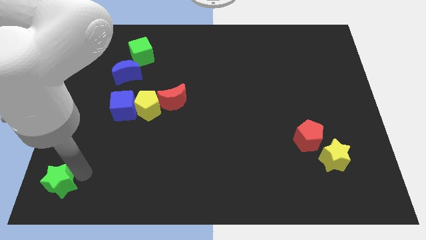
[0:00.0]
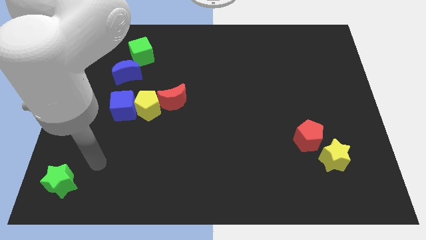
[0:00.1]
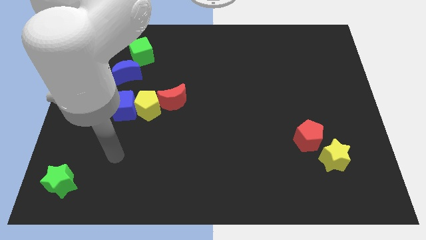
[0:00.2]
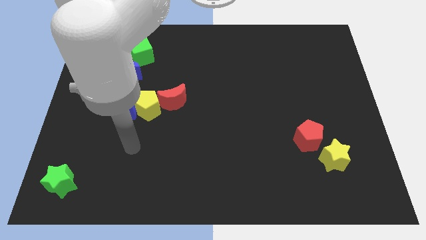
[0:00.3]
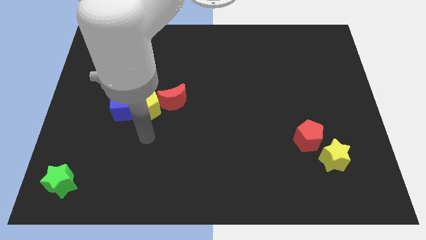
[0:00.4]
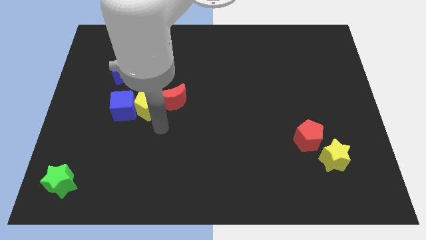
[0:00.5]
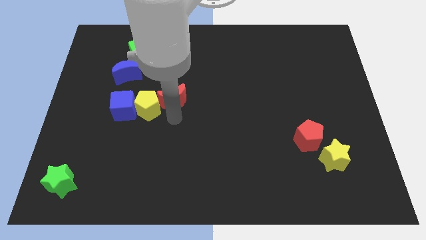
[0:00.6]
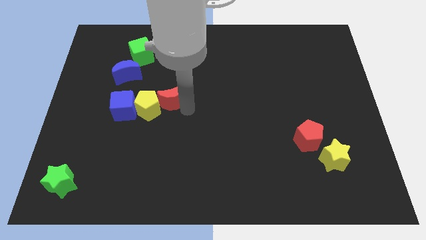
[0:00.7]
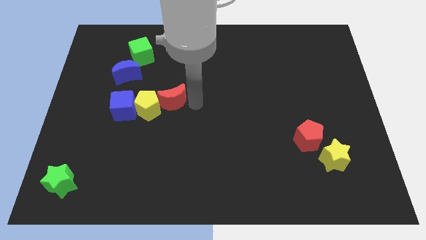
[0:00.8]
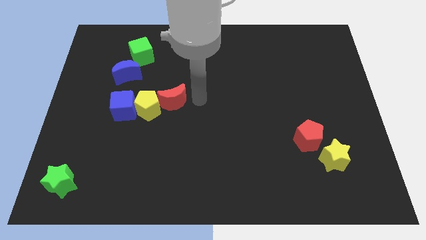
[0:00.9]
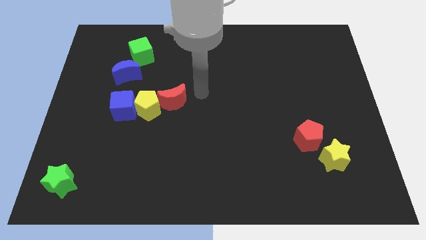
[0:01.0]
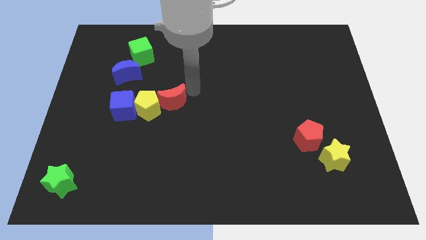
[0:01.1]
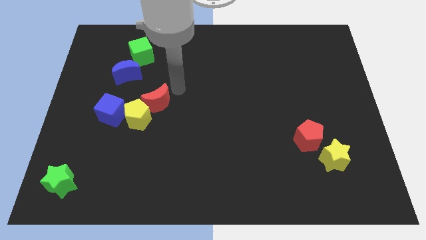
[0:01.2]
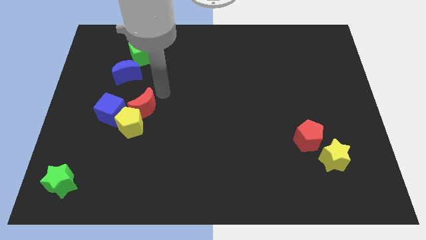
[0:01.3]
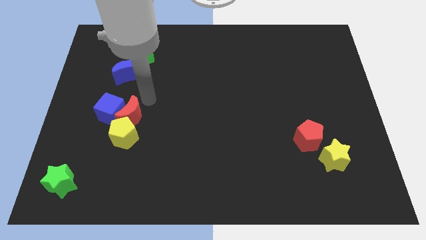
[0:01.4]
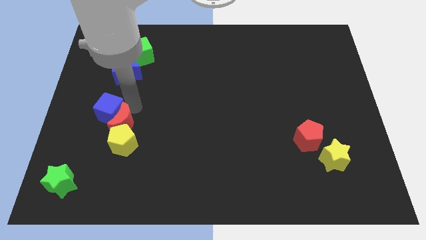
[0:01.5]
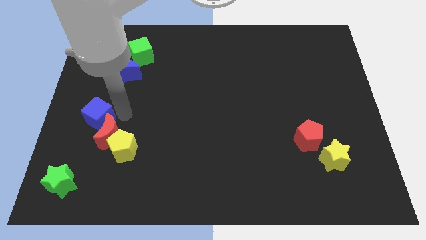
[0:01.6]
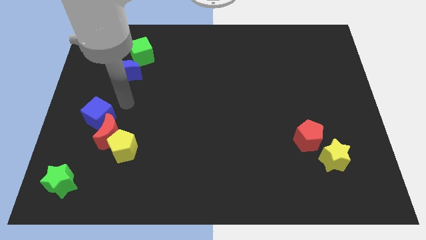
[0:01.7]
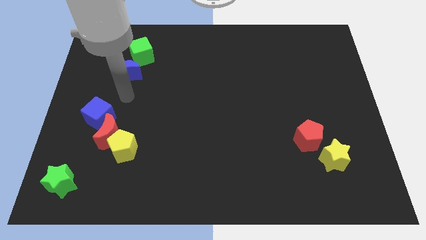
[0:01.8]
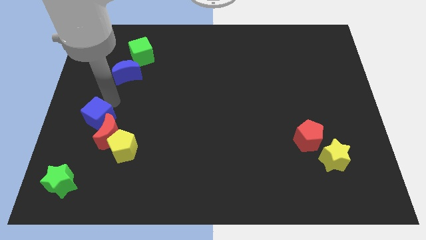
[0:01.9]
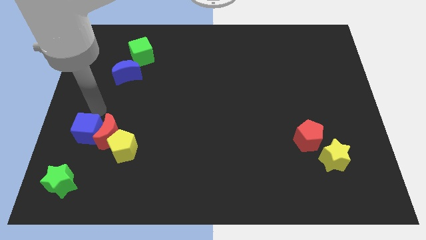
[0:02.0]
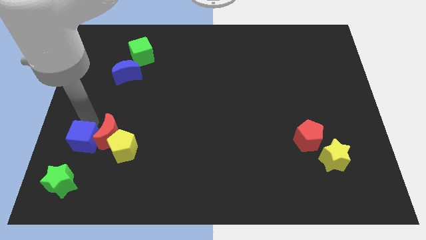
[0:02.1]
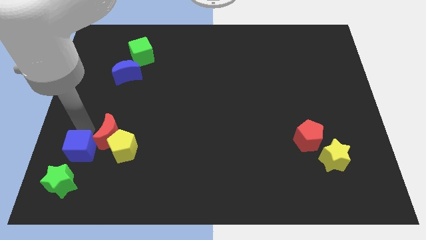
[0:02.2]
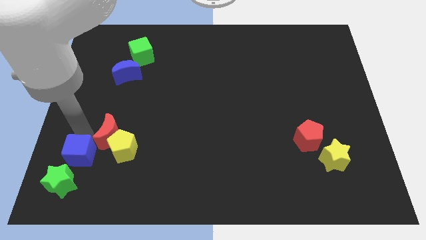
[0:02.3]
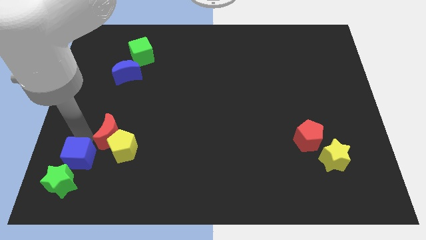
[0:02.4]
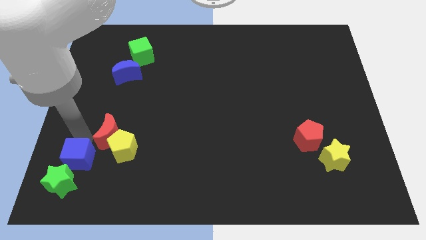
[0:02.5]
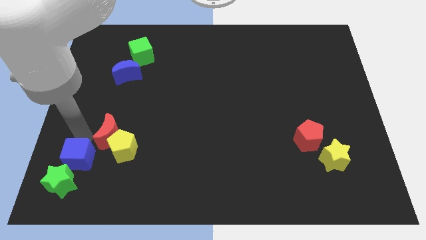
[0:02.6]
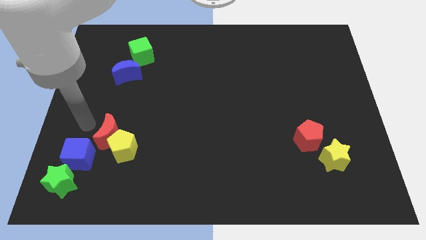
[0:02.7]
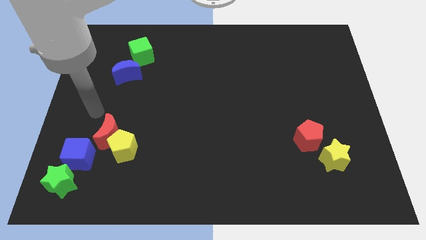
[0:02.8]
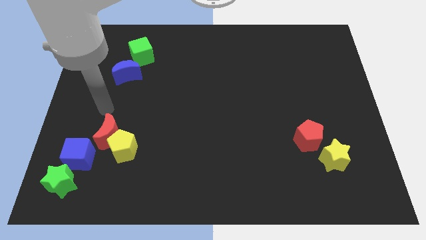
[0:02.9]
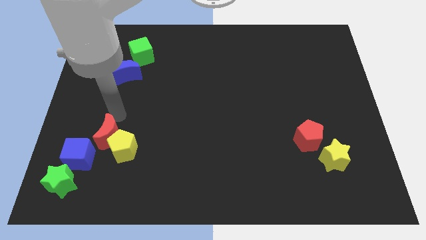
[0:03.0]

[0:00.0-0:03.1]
slide the blue cube to the top of the green star

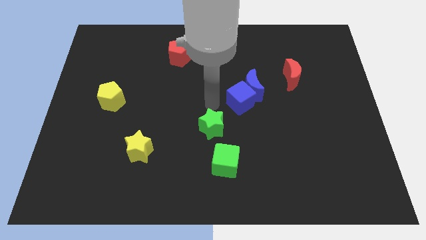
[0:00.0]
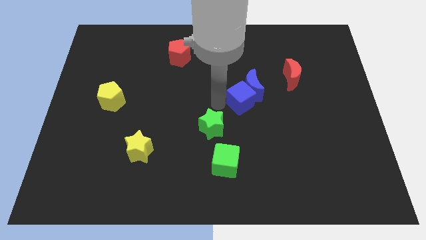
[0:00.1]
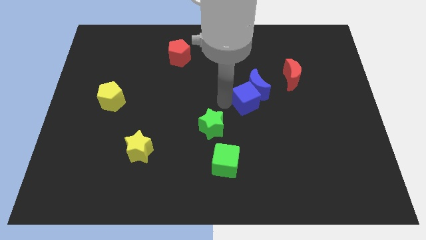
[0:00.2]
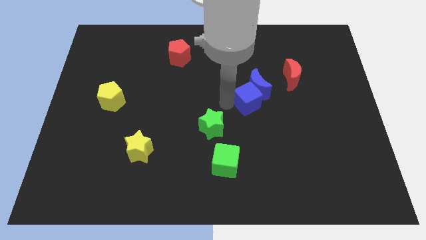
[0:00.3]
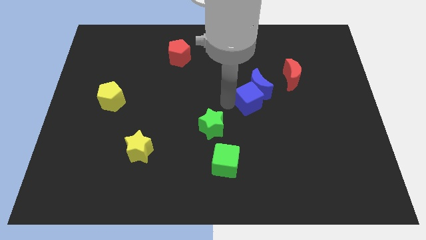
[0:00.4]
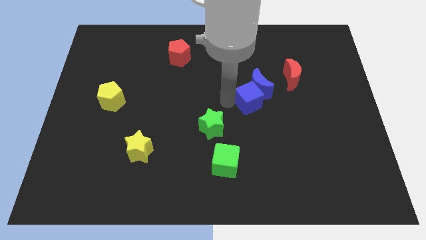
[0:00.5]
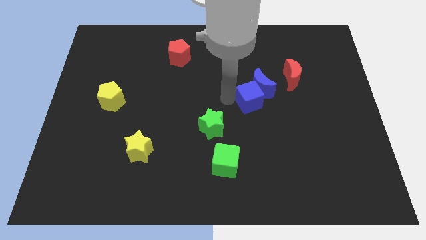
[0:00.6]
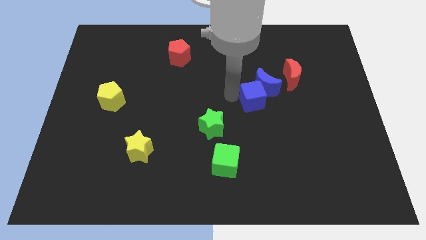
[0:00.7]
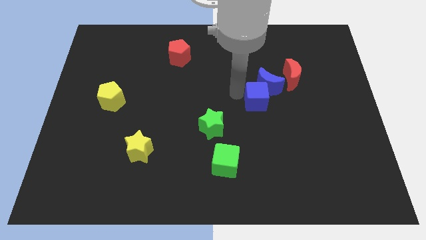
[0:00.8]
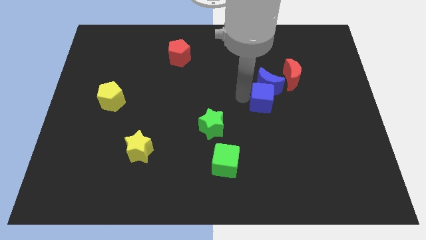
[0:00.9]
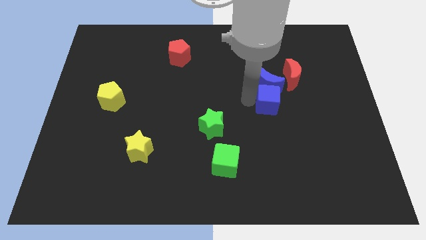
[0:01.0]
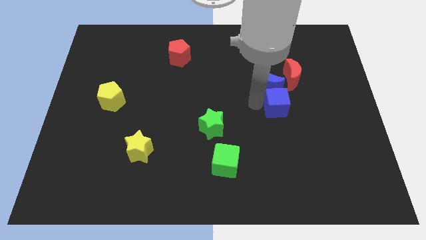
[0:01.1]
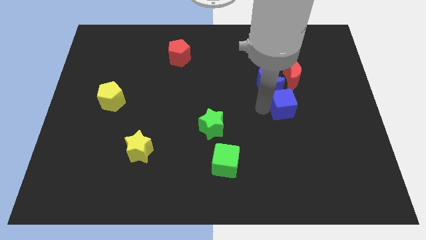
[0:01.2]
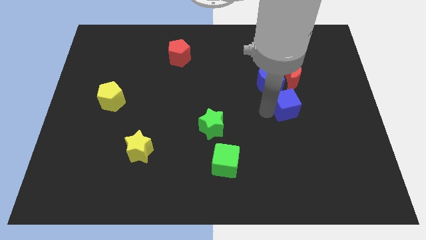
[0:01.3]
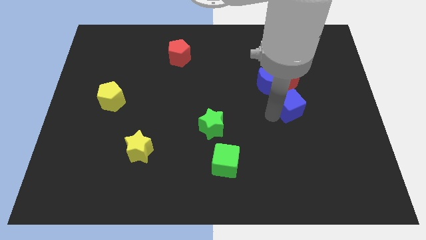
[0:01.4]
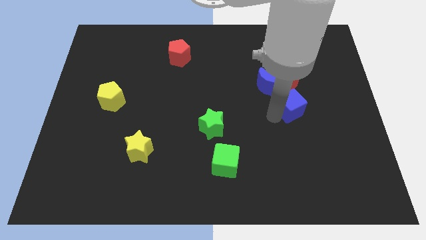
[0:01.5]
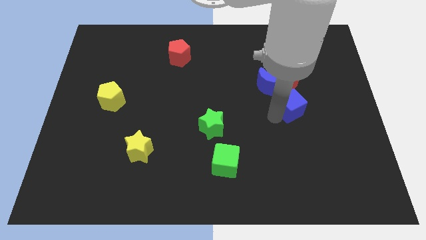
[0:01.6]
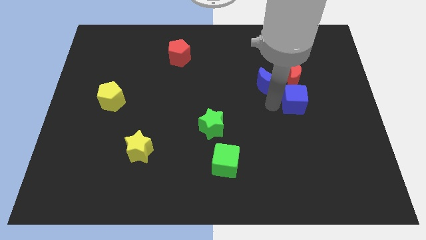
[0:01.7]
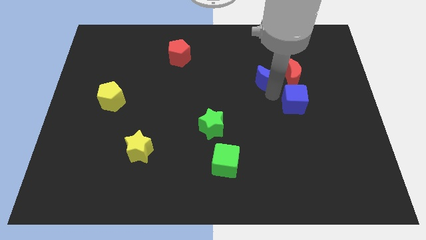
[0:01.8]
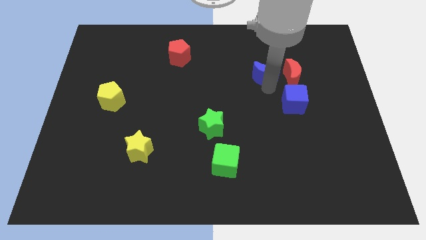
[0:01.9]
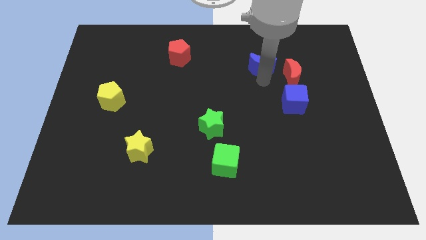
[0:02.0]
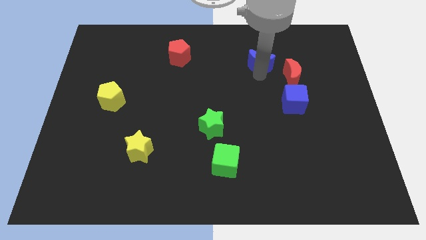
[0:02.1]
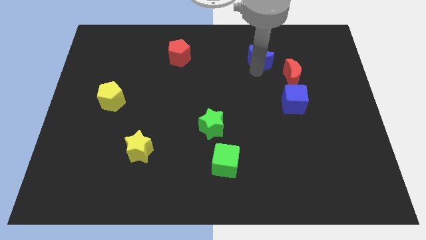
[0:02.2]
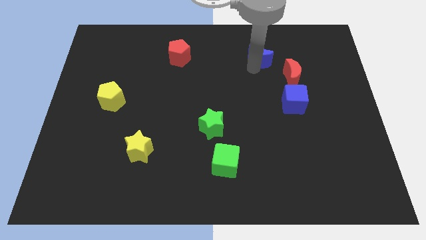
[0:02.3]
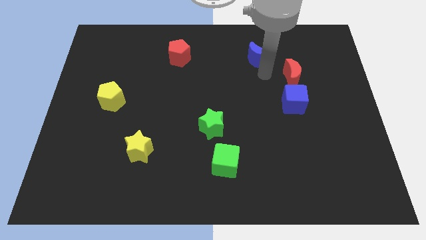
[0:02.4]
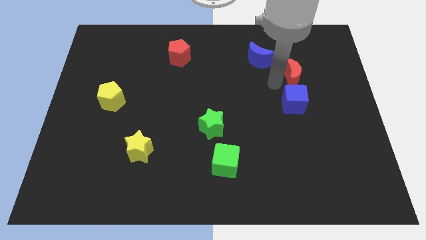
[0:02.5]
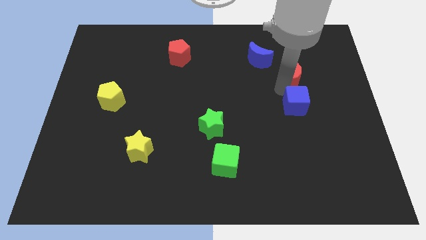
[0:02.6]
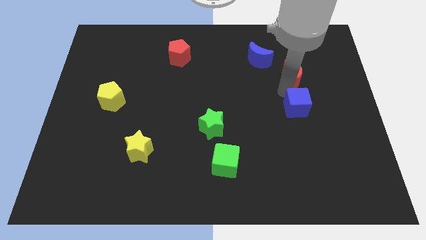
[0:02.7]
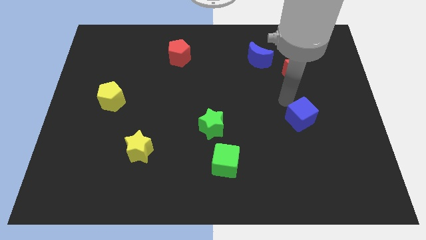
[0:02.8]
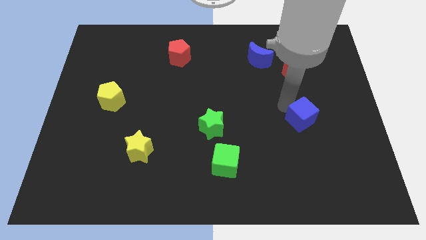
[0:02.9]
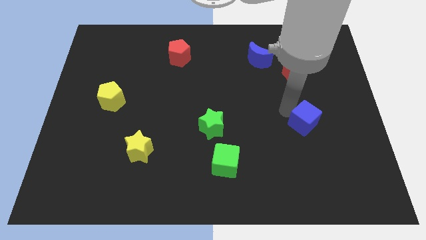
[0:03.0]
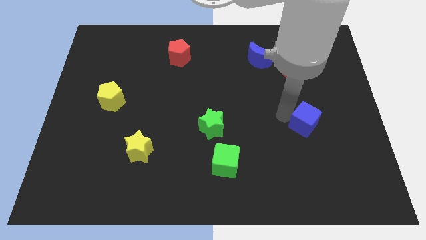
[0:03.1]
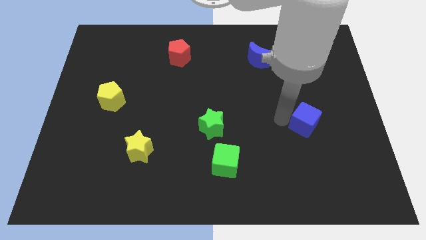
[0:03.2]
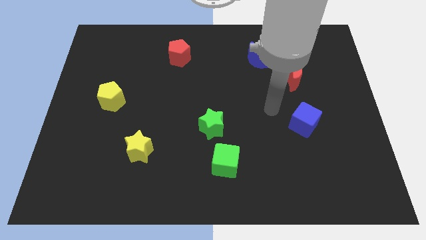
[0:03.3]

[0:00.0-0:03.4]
drag the blue cube horizontally on the right side of the green star

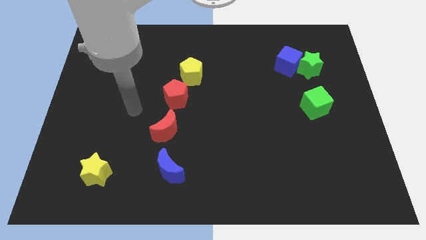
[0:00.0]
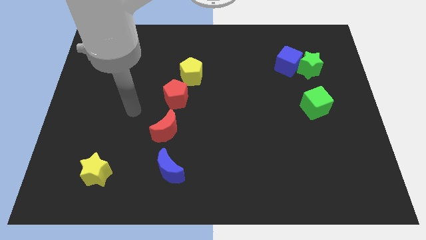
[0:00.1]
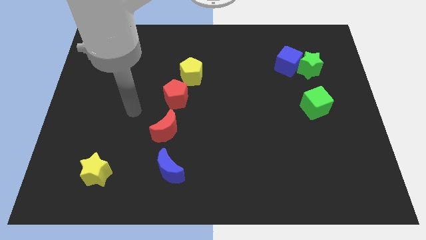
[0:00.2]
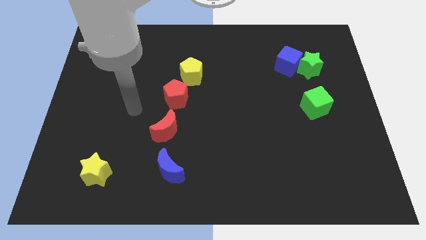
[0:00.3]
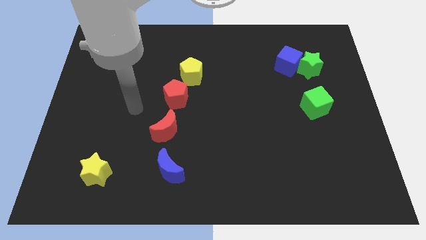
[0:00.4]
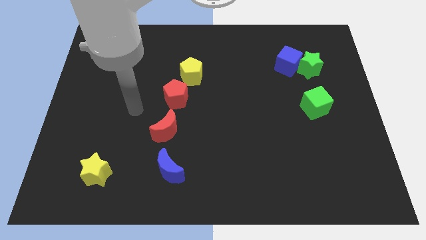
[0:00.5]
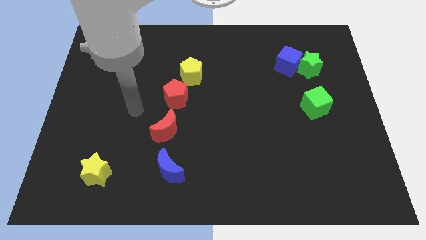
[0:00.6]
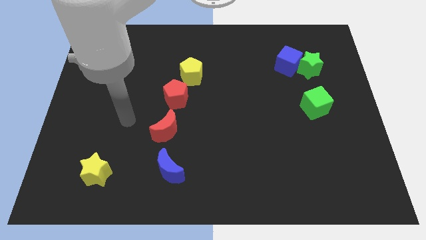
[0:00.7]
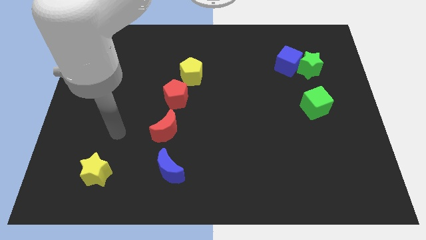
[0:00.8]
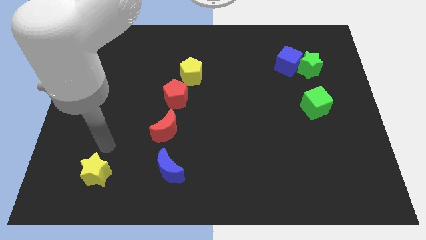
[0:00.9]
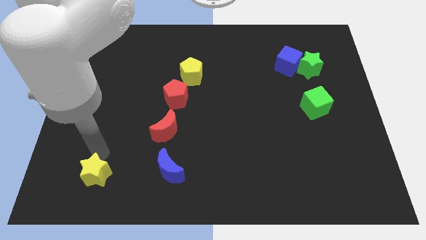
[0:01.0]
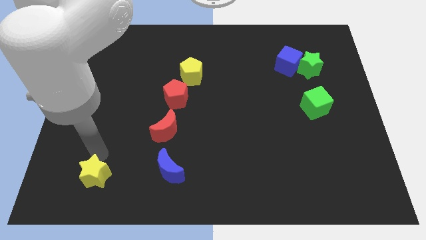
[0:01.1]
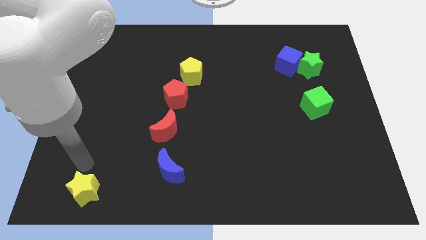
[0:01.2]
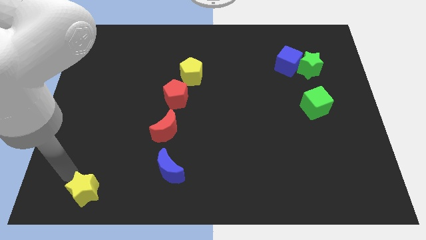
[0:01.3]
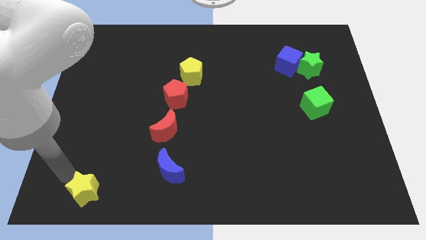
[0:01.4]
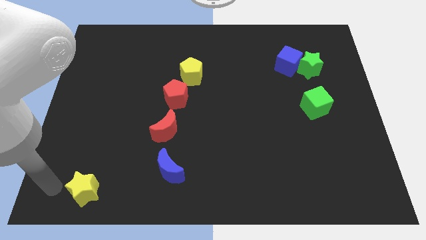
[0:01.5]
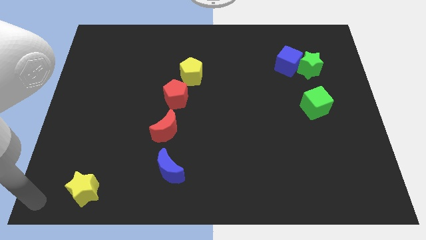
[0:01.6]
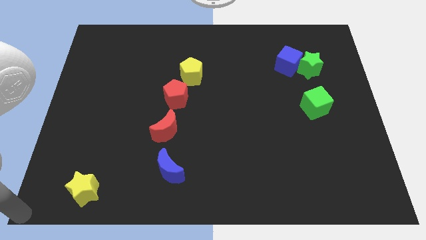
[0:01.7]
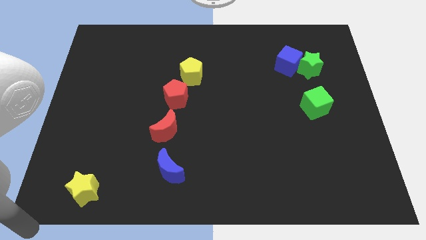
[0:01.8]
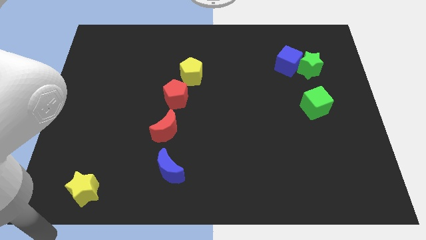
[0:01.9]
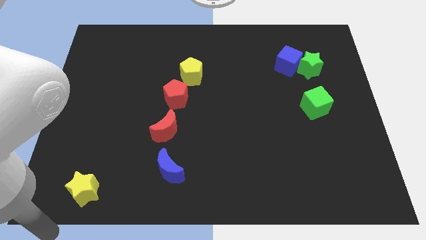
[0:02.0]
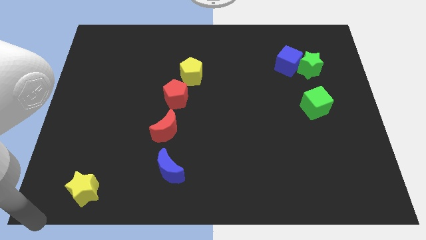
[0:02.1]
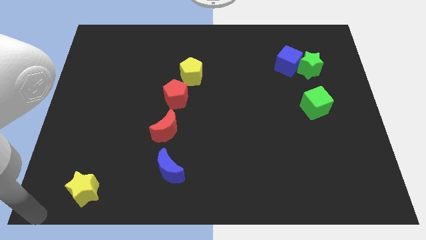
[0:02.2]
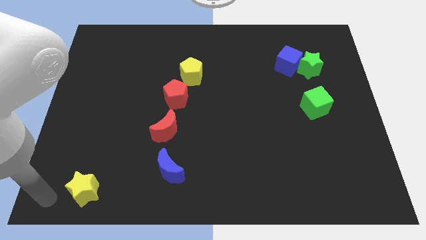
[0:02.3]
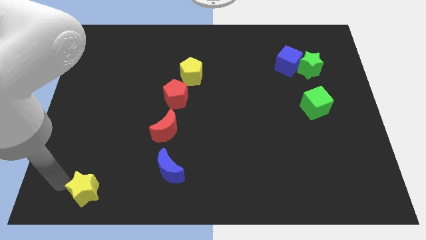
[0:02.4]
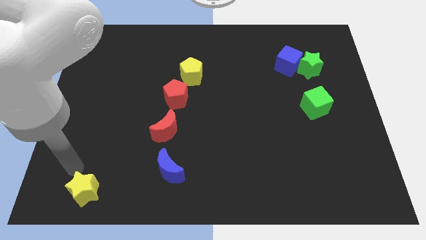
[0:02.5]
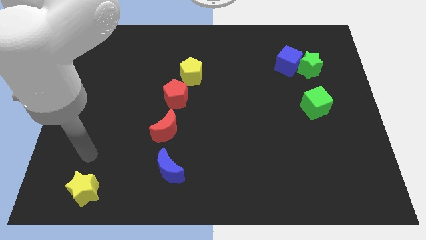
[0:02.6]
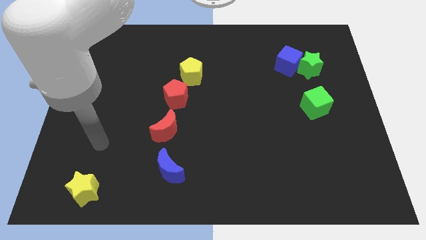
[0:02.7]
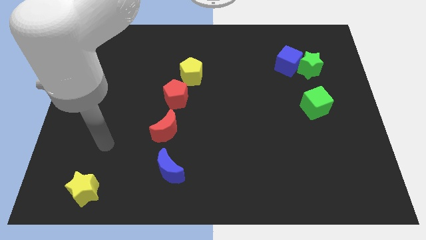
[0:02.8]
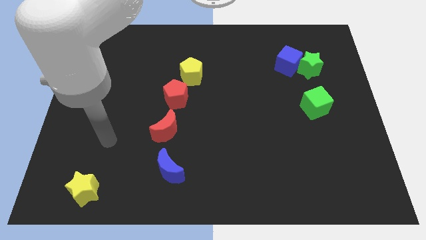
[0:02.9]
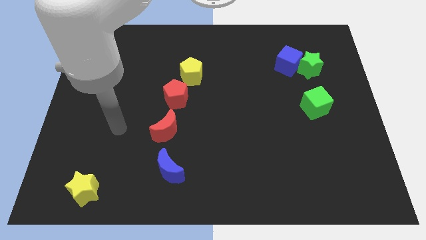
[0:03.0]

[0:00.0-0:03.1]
move the yellow star slightly to the down
